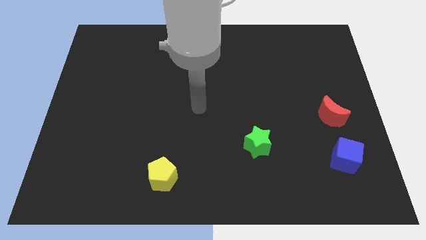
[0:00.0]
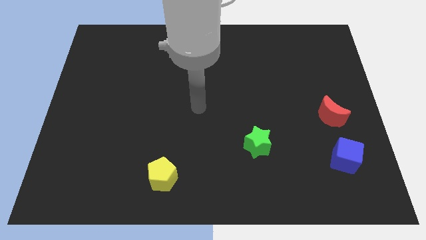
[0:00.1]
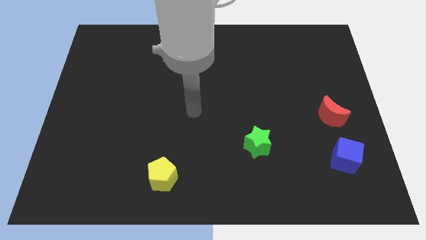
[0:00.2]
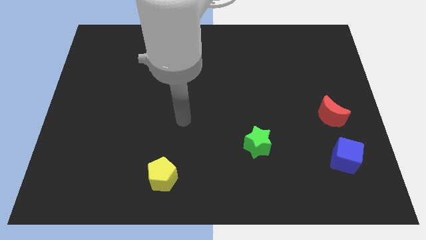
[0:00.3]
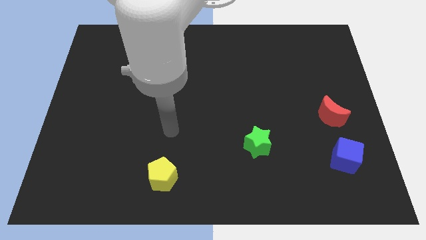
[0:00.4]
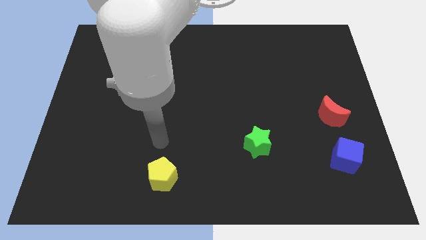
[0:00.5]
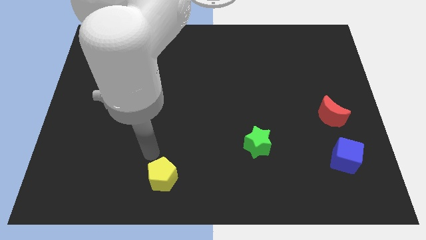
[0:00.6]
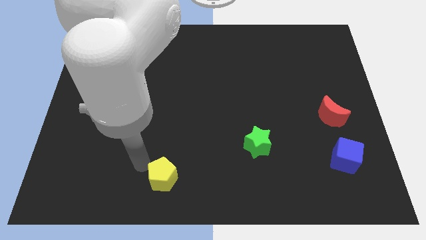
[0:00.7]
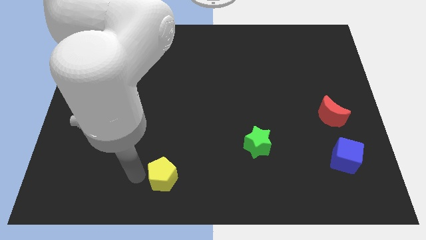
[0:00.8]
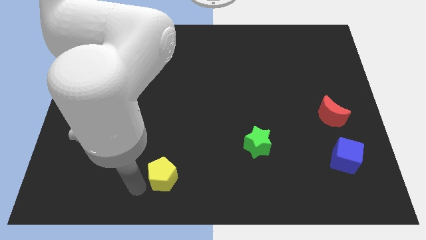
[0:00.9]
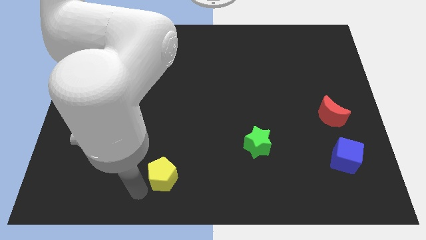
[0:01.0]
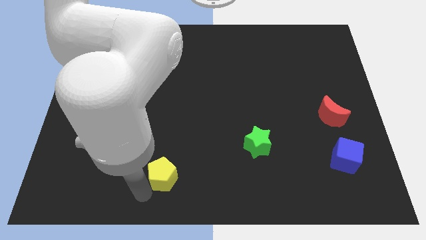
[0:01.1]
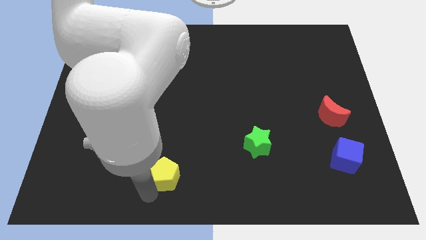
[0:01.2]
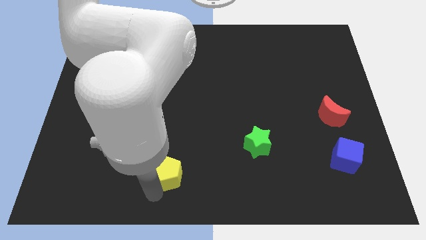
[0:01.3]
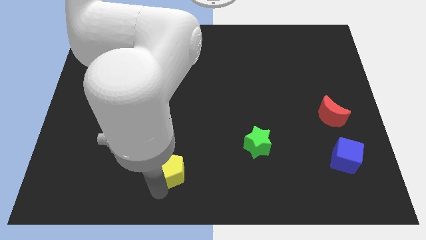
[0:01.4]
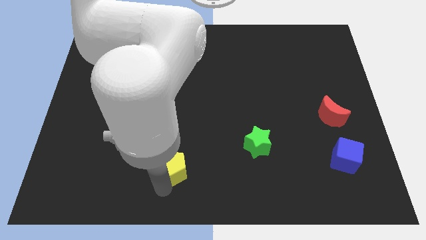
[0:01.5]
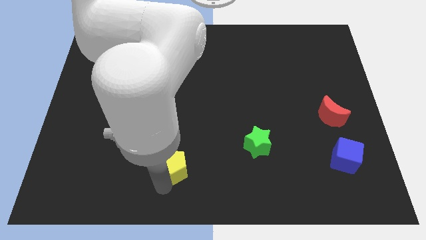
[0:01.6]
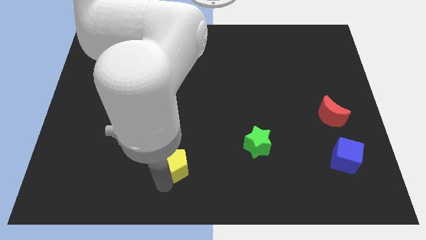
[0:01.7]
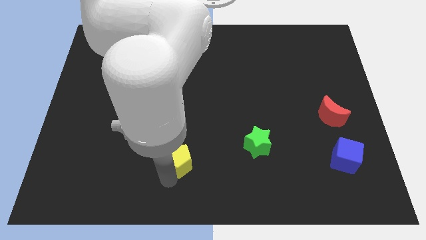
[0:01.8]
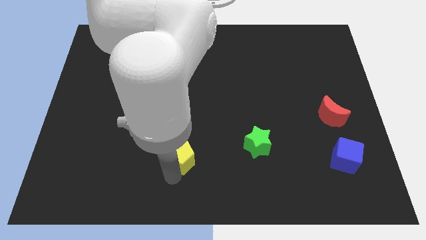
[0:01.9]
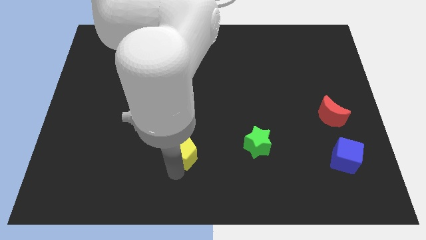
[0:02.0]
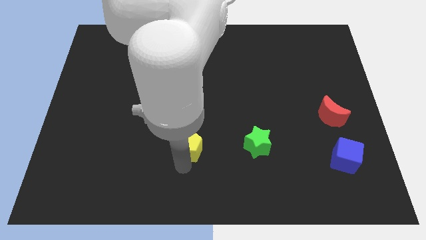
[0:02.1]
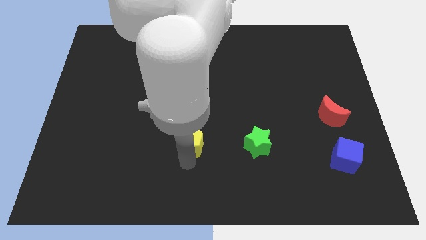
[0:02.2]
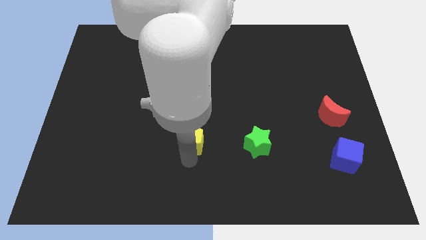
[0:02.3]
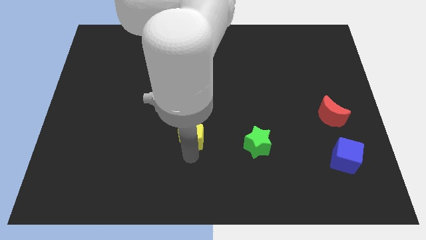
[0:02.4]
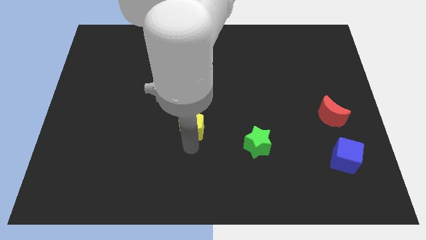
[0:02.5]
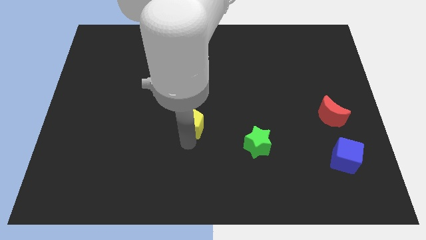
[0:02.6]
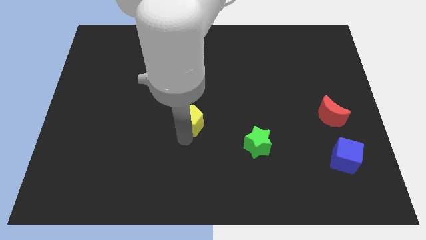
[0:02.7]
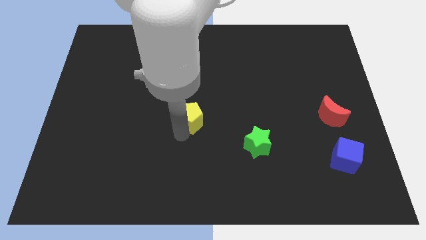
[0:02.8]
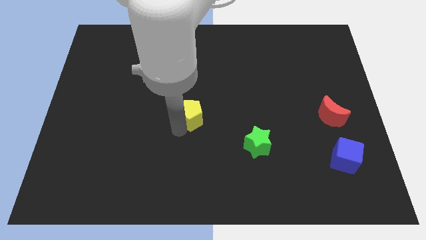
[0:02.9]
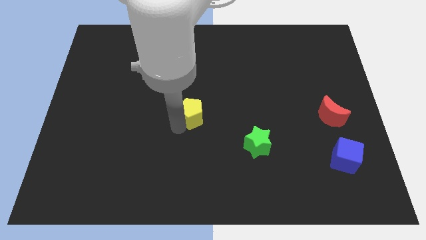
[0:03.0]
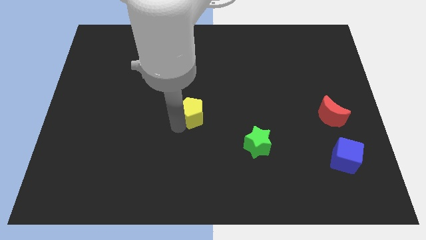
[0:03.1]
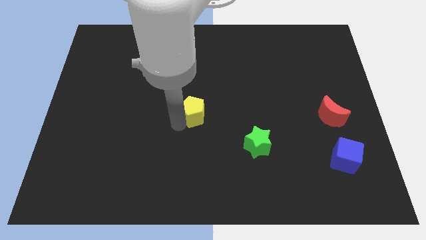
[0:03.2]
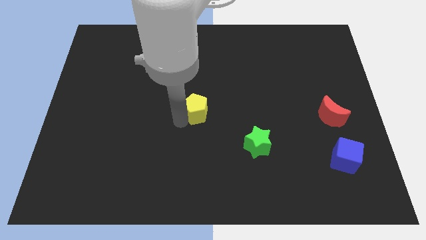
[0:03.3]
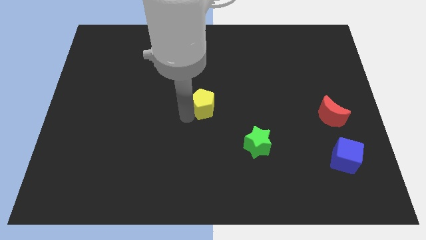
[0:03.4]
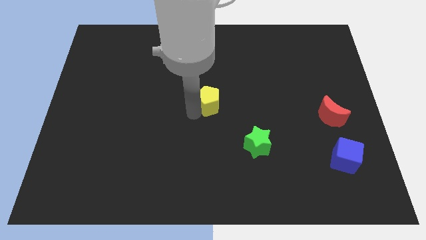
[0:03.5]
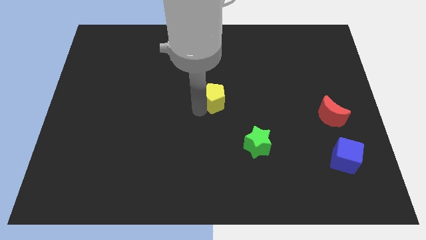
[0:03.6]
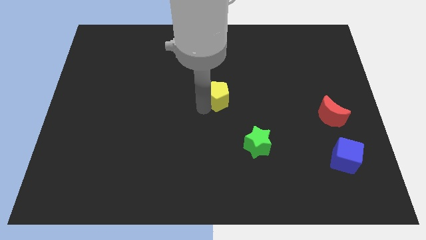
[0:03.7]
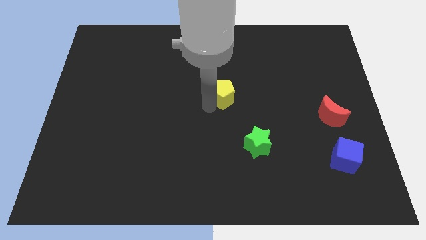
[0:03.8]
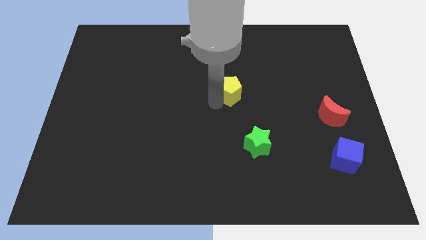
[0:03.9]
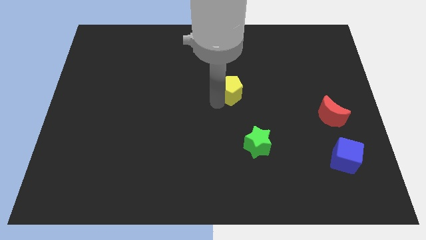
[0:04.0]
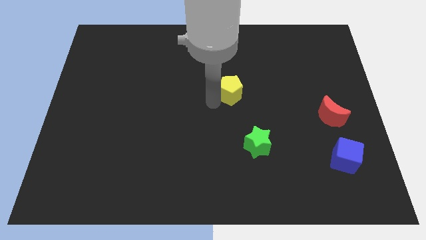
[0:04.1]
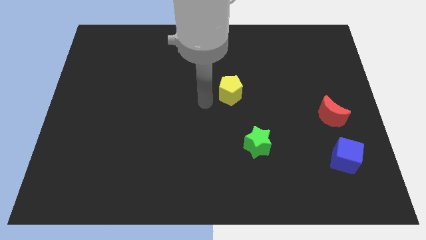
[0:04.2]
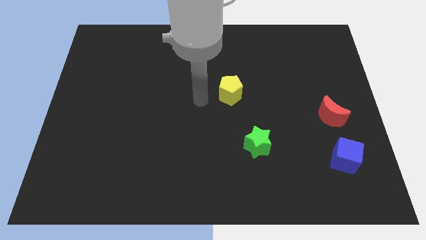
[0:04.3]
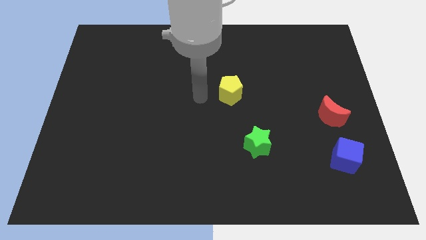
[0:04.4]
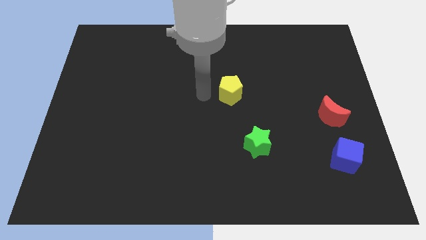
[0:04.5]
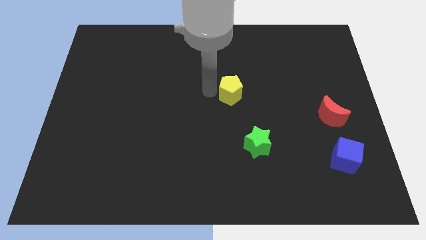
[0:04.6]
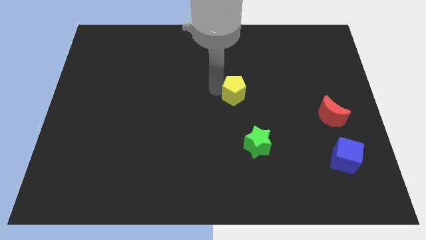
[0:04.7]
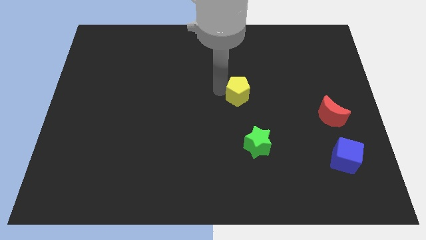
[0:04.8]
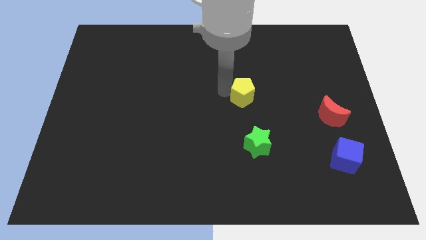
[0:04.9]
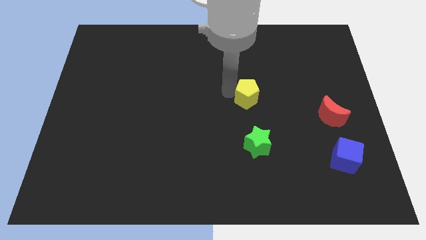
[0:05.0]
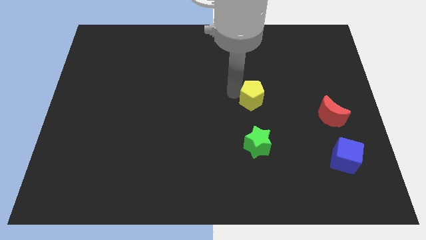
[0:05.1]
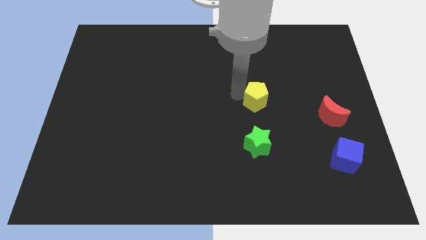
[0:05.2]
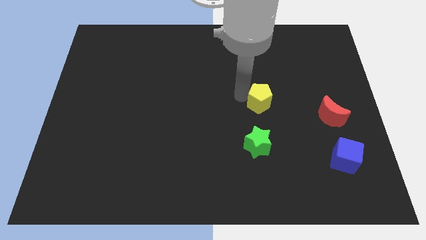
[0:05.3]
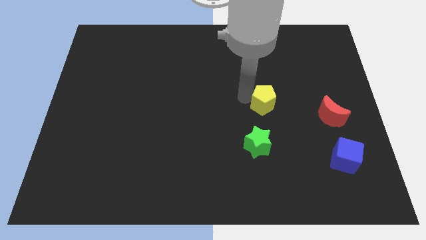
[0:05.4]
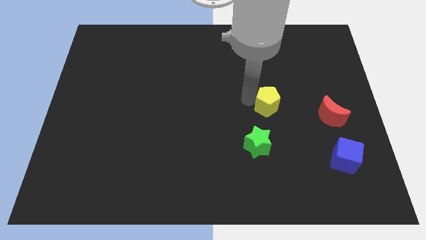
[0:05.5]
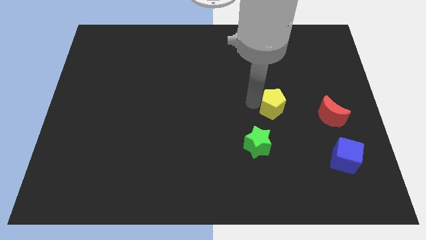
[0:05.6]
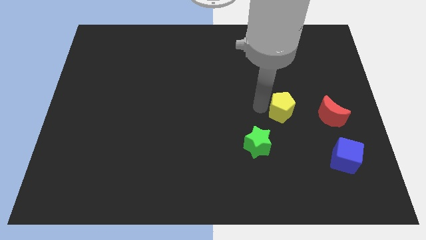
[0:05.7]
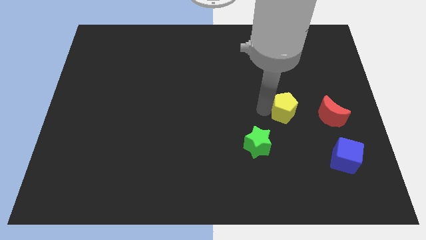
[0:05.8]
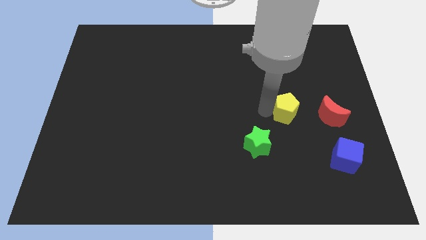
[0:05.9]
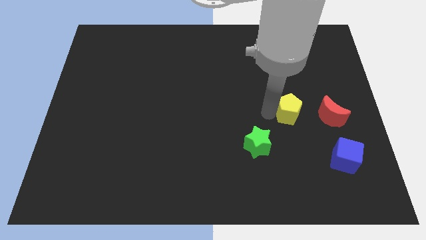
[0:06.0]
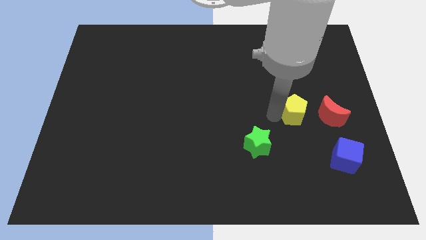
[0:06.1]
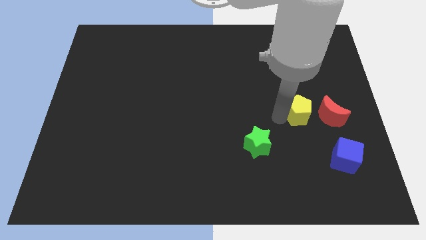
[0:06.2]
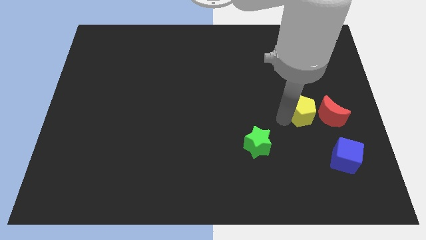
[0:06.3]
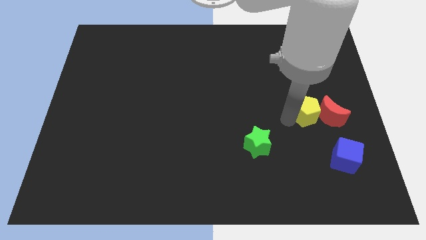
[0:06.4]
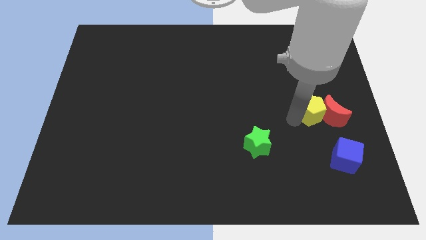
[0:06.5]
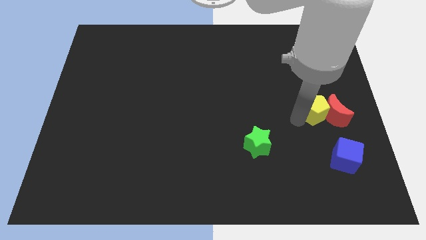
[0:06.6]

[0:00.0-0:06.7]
put the yellow pentagon towards the red moon

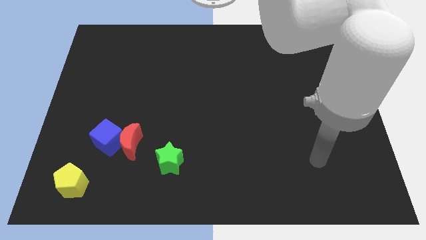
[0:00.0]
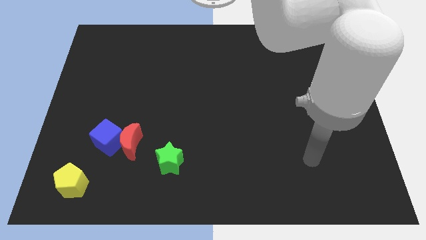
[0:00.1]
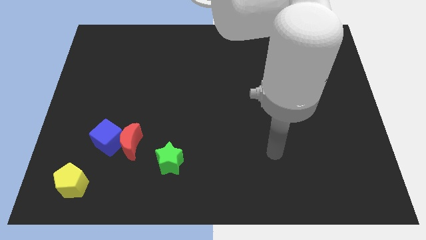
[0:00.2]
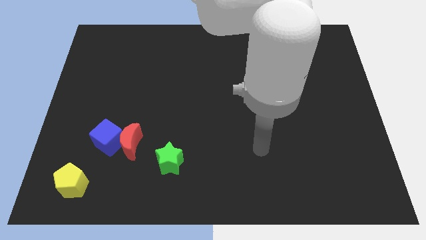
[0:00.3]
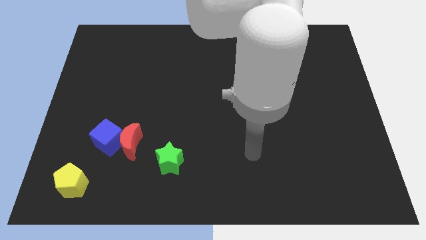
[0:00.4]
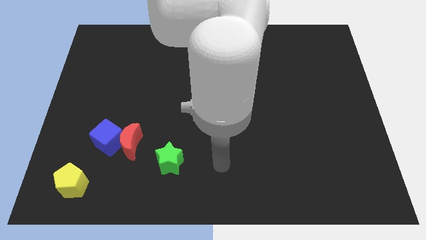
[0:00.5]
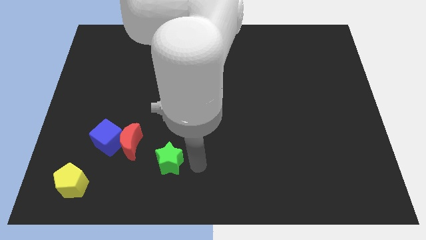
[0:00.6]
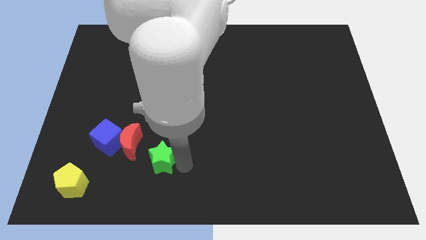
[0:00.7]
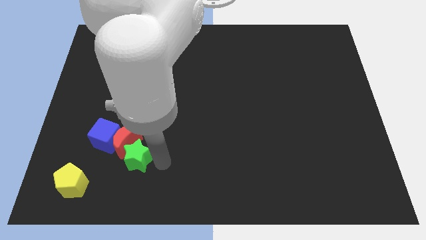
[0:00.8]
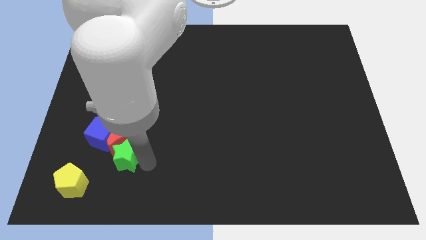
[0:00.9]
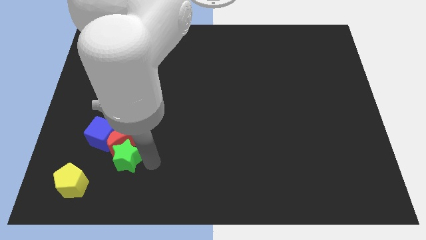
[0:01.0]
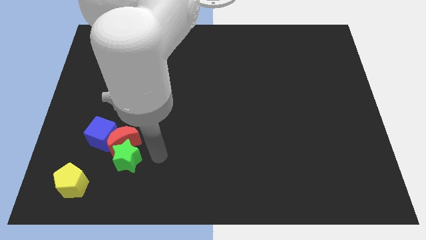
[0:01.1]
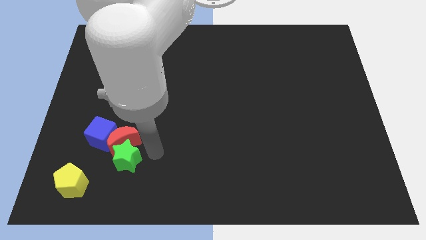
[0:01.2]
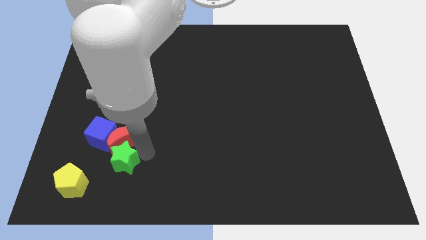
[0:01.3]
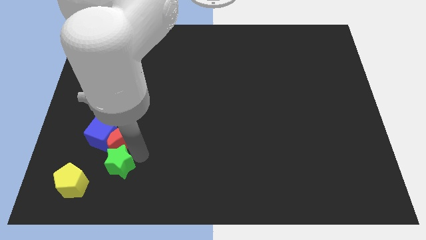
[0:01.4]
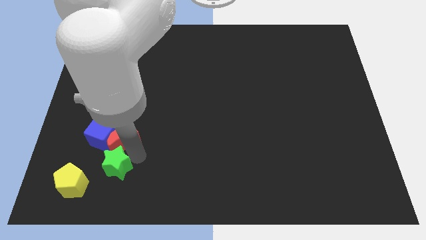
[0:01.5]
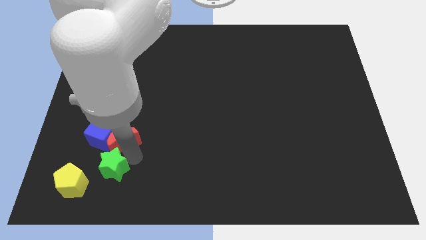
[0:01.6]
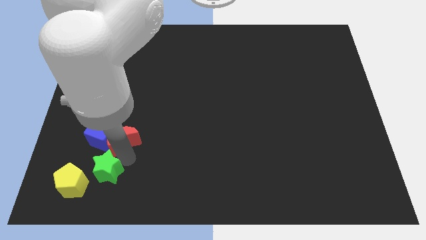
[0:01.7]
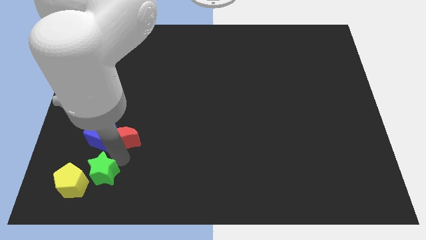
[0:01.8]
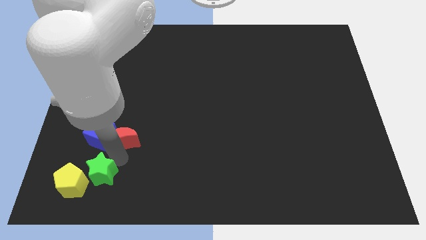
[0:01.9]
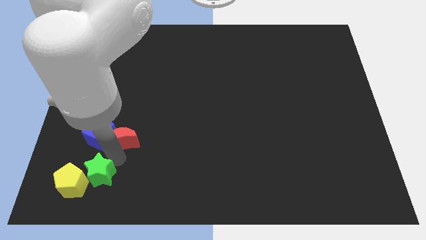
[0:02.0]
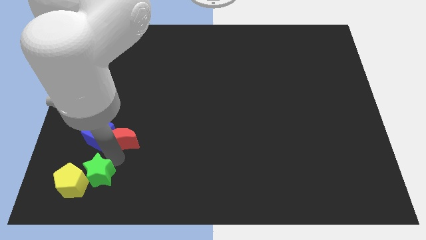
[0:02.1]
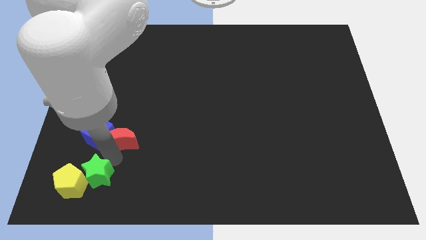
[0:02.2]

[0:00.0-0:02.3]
move the star to the yellow block
